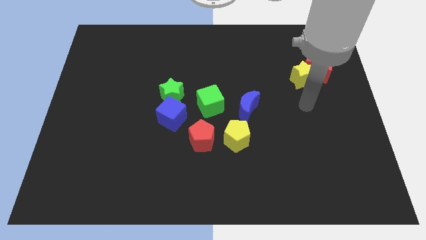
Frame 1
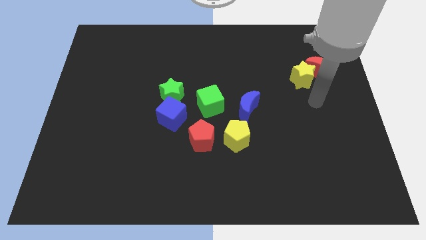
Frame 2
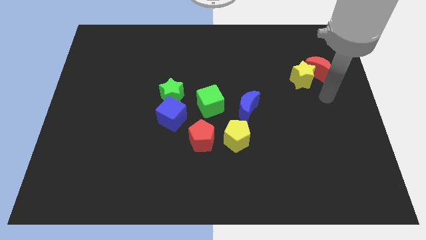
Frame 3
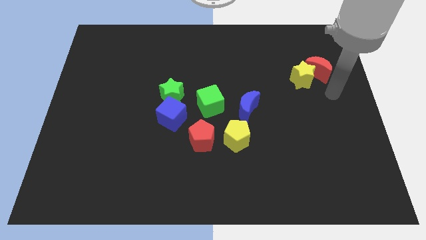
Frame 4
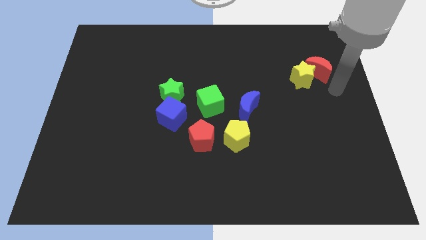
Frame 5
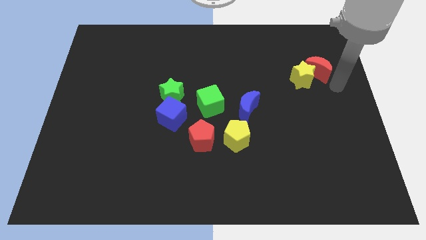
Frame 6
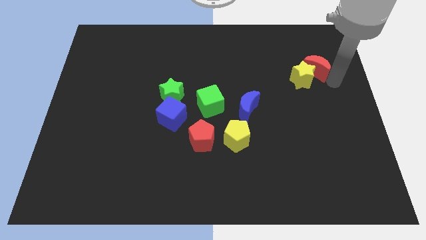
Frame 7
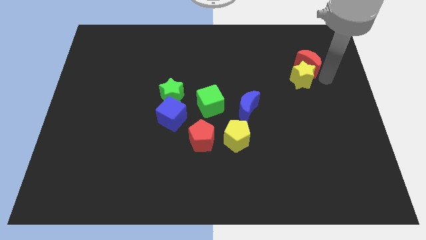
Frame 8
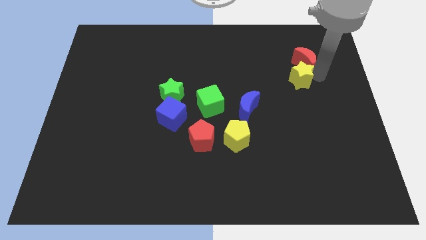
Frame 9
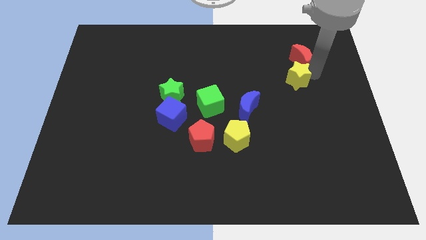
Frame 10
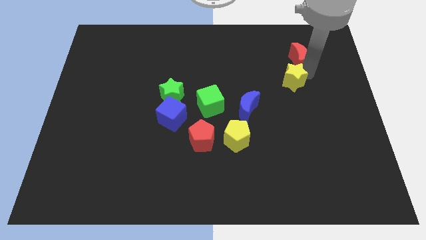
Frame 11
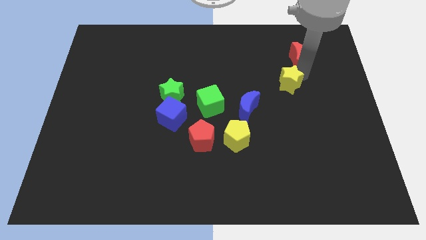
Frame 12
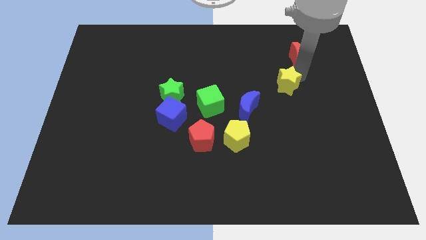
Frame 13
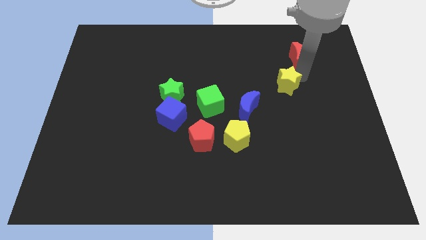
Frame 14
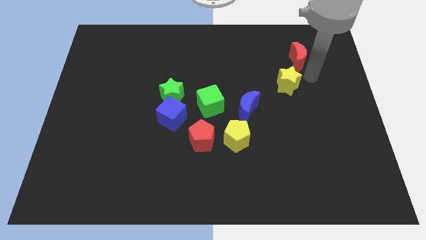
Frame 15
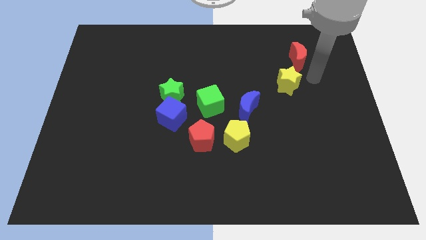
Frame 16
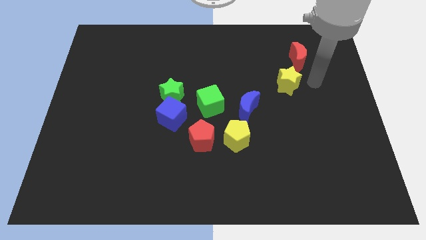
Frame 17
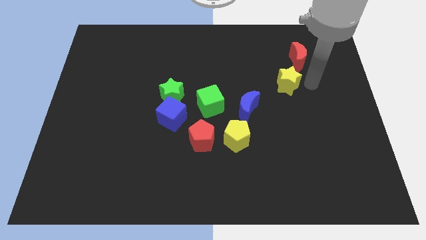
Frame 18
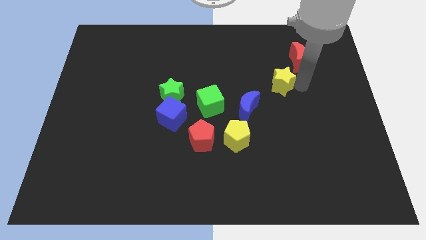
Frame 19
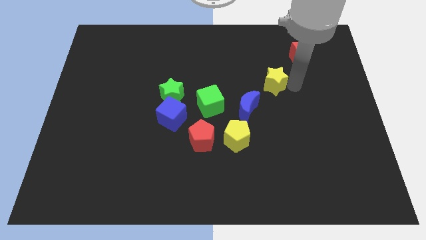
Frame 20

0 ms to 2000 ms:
separate the yellow star and the red moon

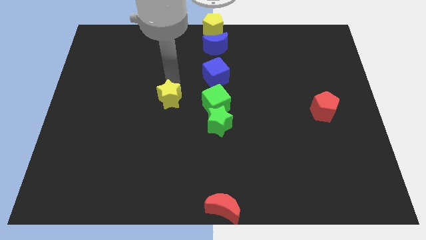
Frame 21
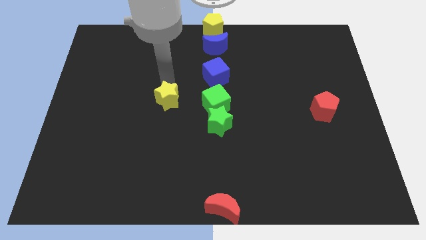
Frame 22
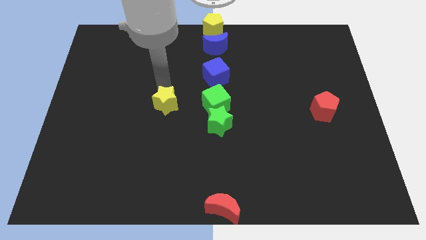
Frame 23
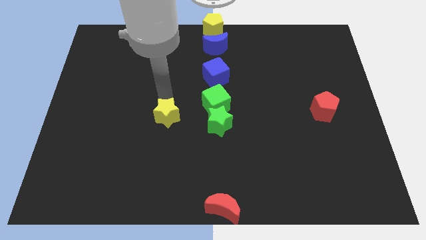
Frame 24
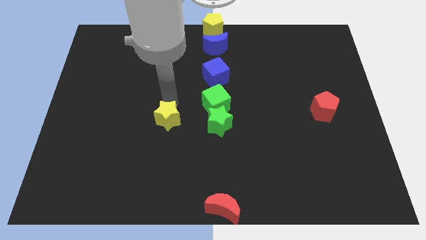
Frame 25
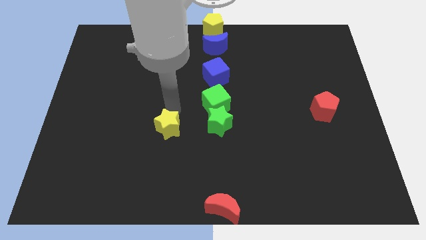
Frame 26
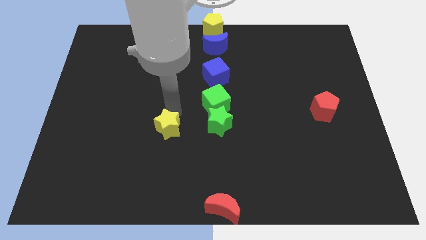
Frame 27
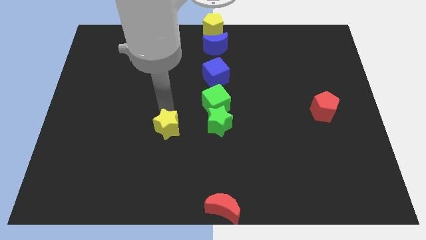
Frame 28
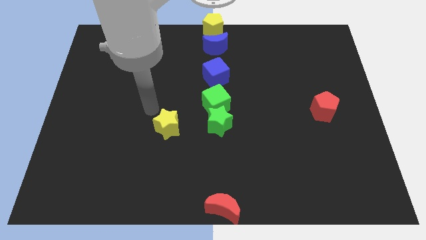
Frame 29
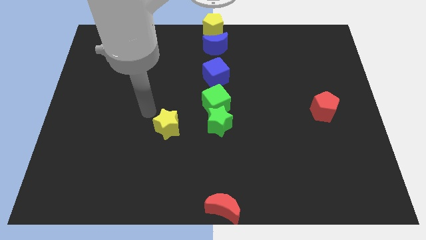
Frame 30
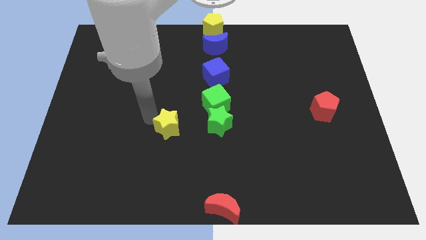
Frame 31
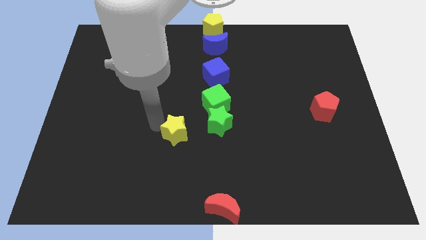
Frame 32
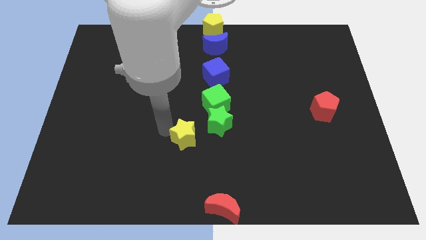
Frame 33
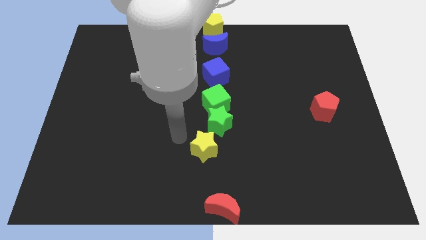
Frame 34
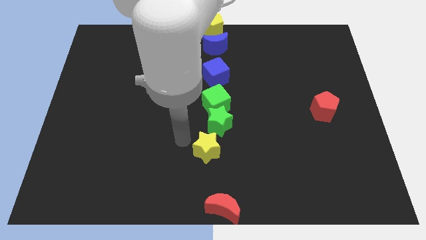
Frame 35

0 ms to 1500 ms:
move the yellow star diagonally to the red pentagon

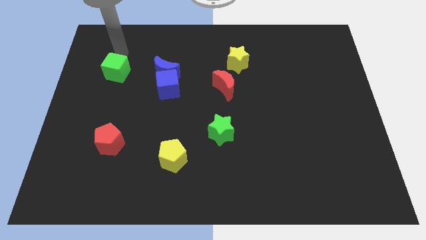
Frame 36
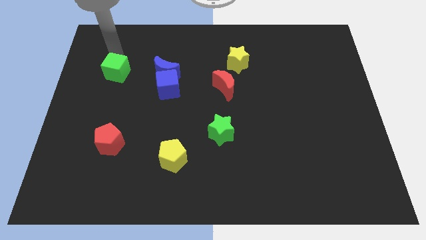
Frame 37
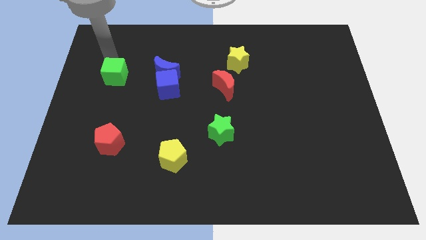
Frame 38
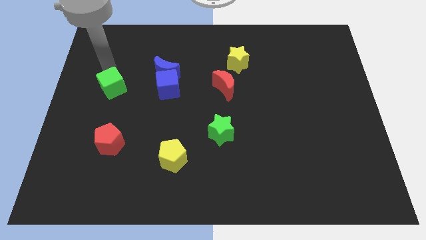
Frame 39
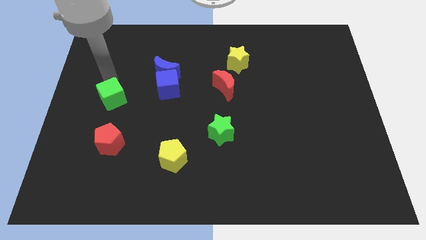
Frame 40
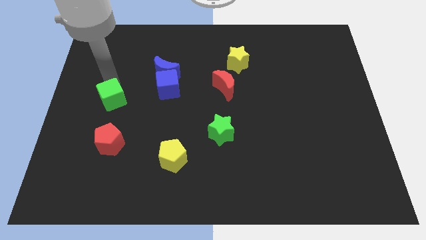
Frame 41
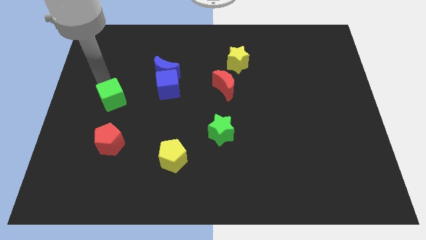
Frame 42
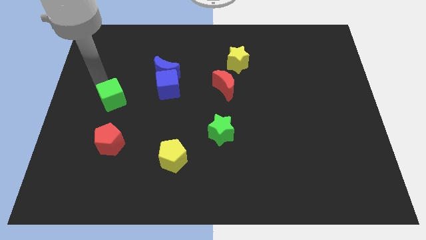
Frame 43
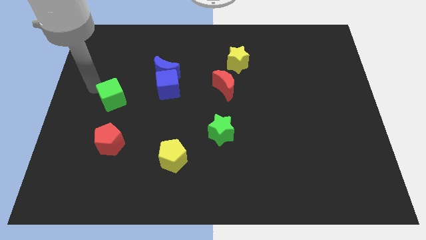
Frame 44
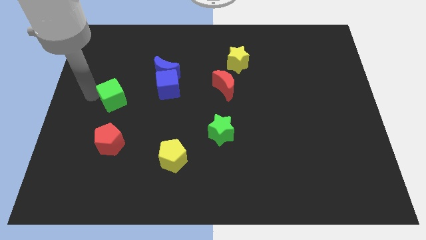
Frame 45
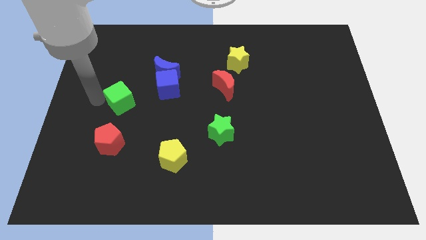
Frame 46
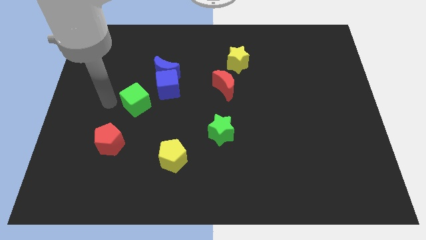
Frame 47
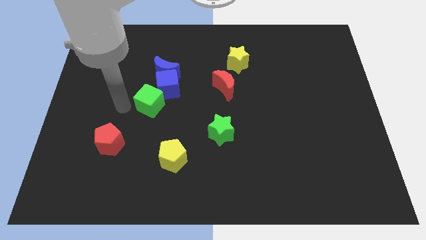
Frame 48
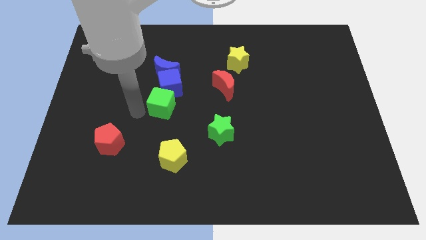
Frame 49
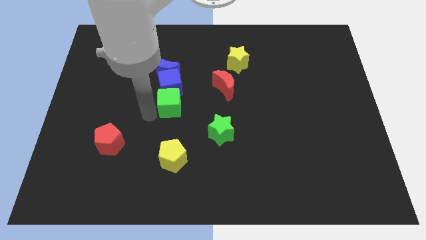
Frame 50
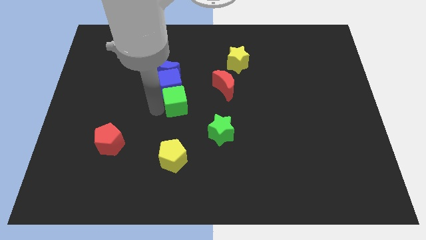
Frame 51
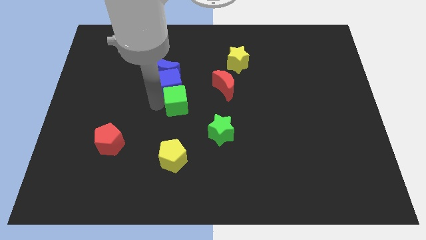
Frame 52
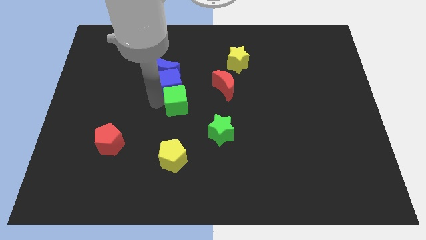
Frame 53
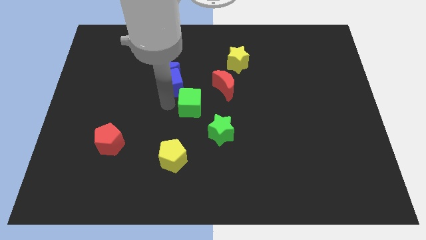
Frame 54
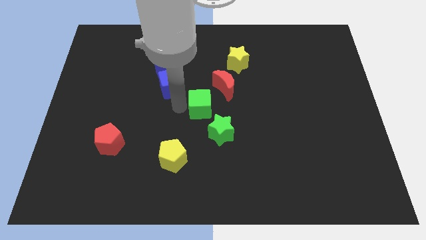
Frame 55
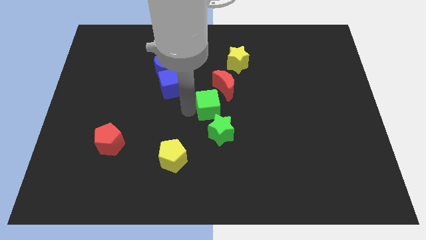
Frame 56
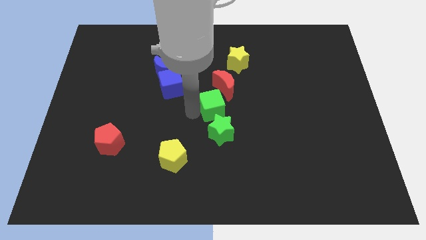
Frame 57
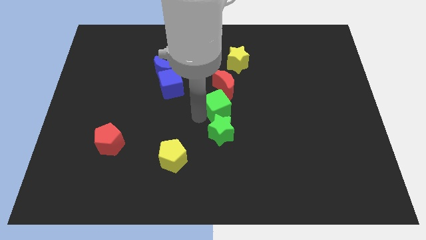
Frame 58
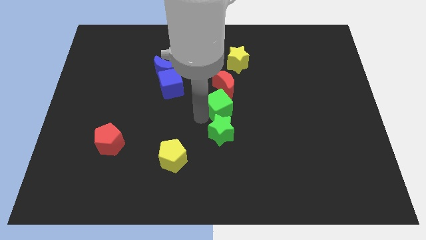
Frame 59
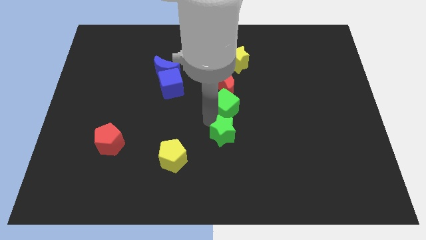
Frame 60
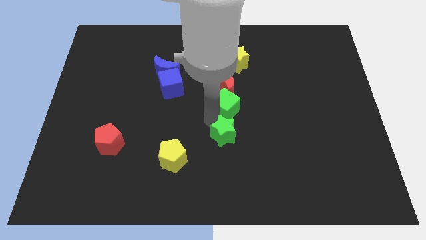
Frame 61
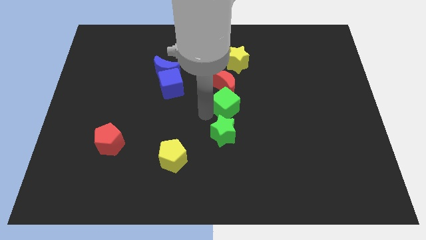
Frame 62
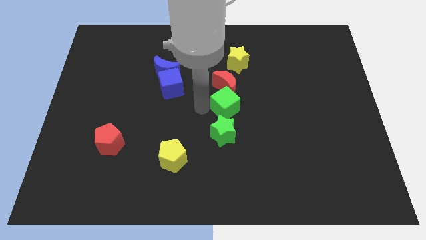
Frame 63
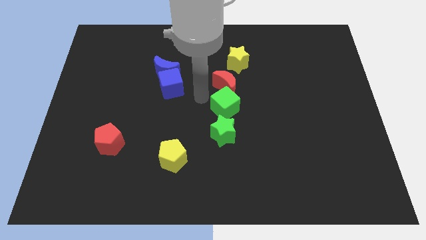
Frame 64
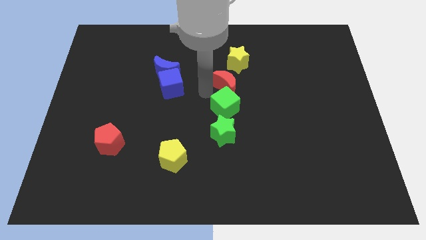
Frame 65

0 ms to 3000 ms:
place the green cube vertically in between the red crescent and green star

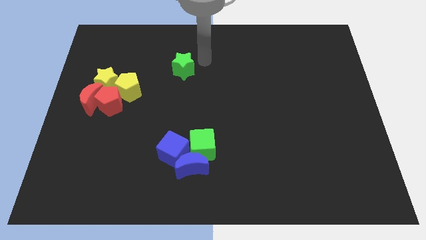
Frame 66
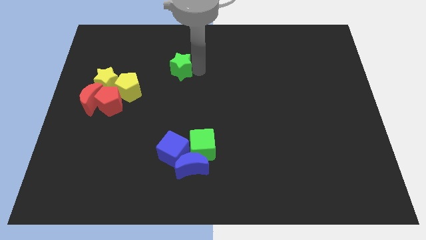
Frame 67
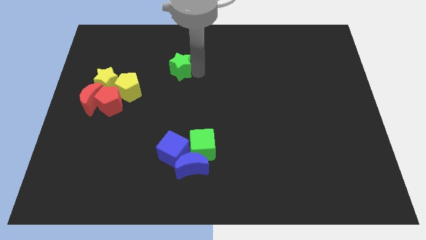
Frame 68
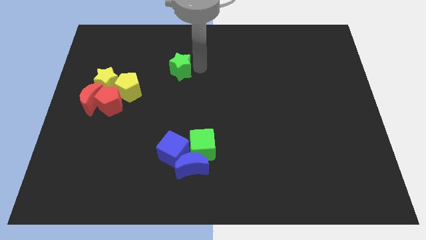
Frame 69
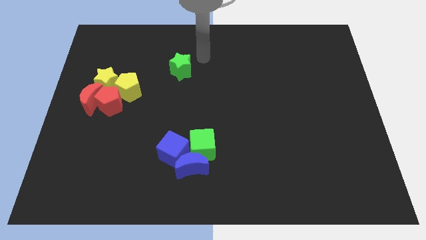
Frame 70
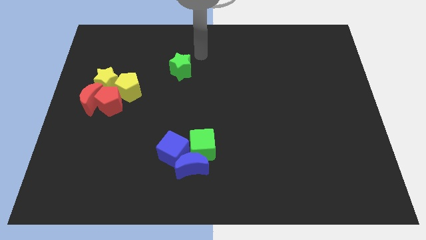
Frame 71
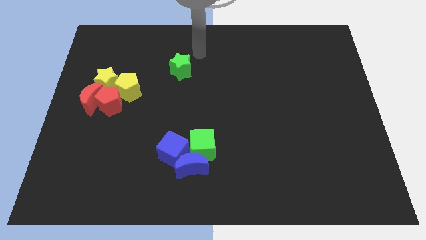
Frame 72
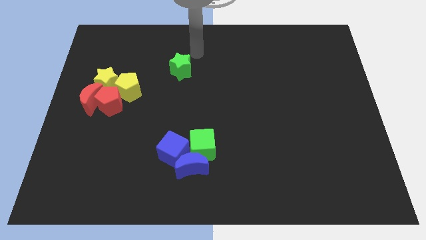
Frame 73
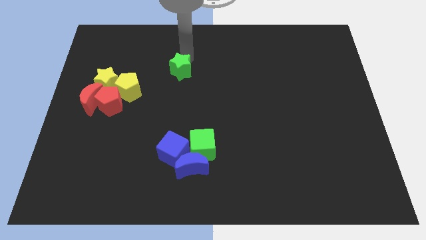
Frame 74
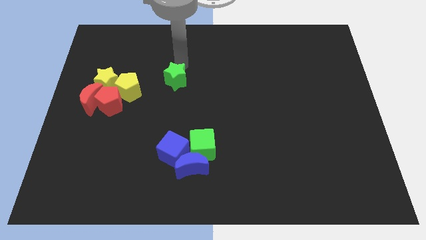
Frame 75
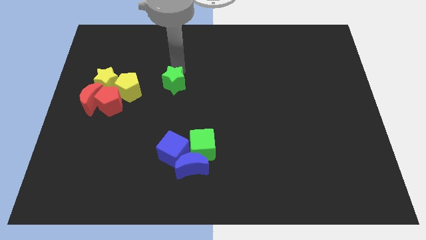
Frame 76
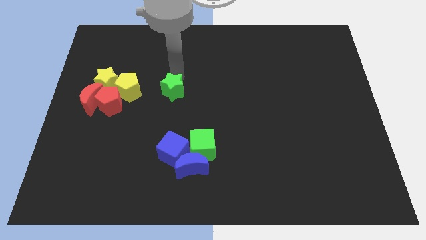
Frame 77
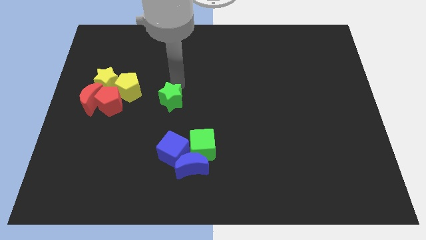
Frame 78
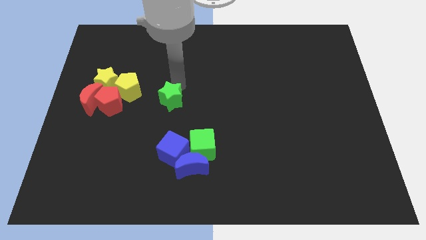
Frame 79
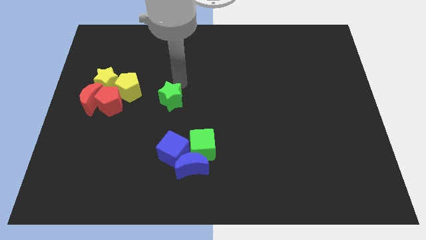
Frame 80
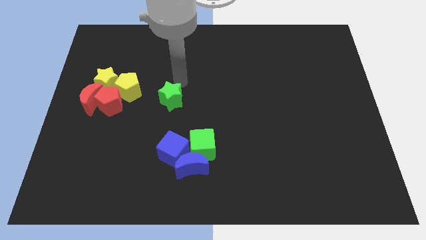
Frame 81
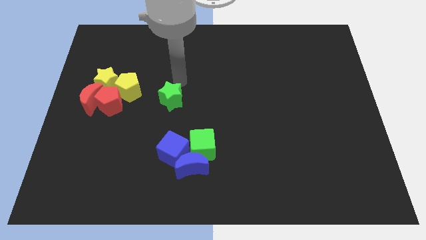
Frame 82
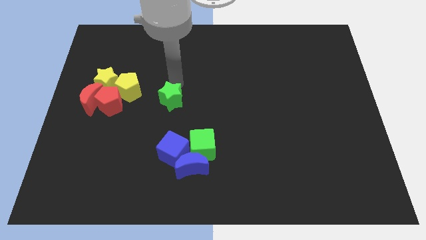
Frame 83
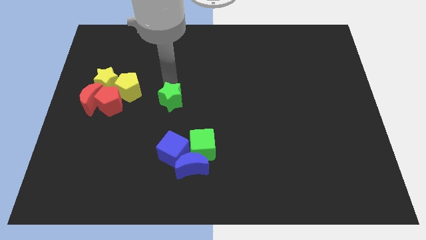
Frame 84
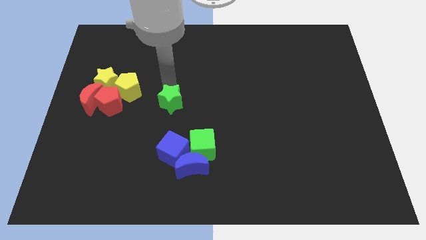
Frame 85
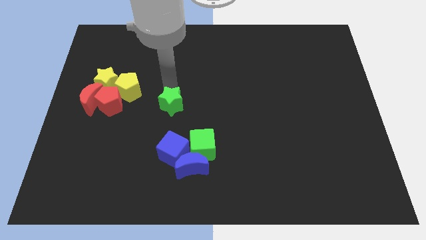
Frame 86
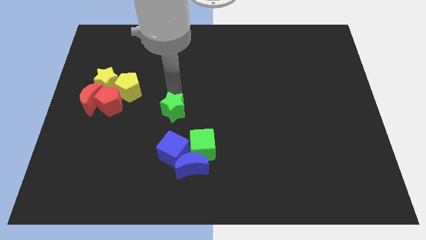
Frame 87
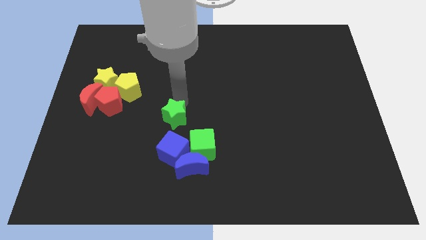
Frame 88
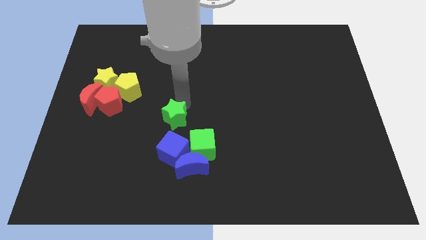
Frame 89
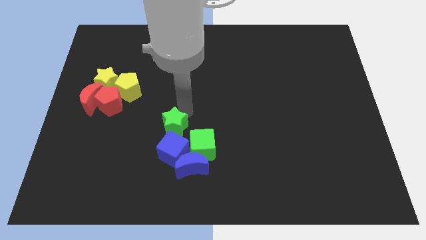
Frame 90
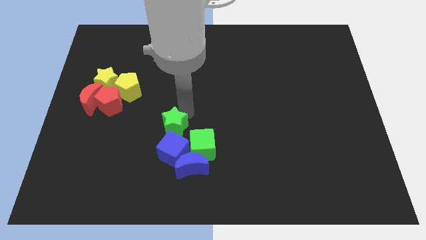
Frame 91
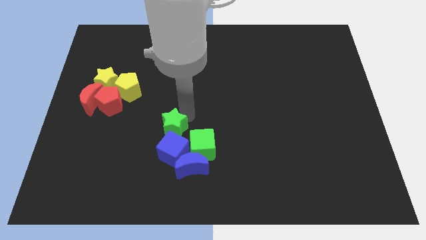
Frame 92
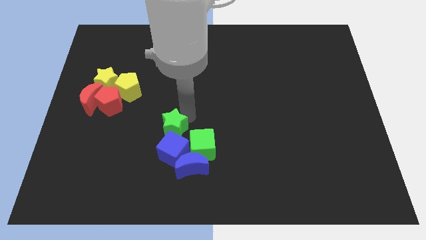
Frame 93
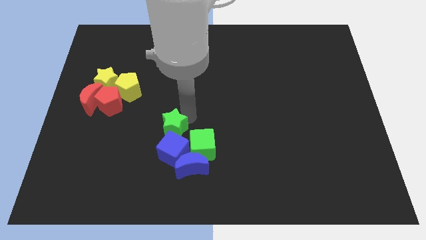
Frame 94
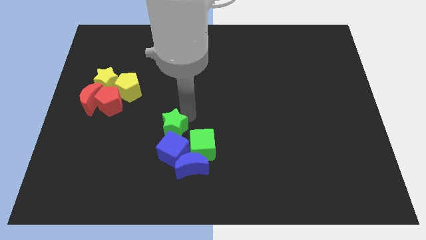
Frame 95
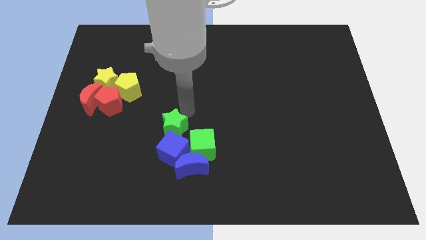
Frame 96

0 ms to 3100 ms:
place the green star at the top of blue cube
